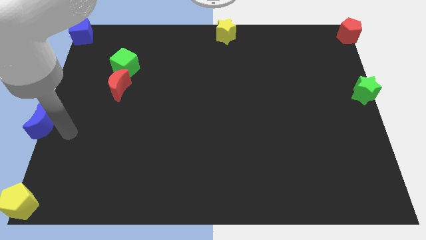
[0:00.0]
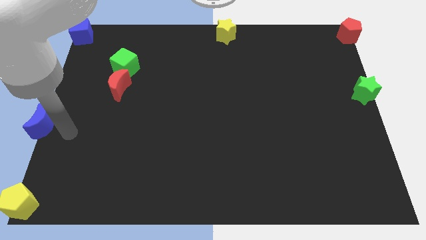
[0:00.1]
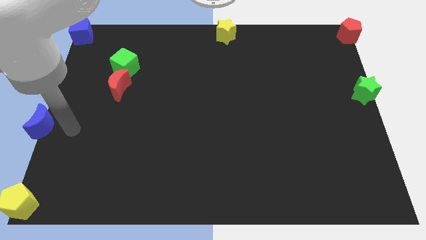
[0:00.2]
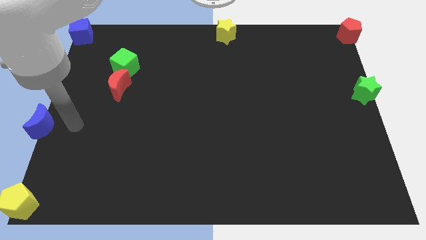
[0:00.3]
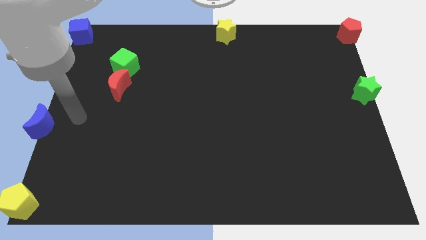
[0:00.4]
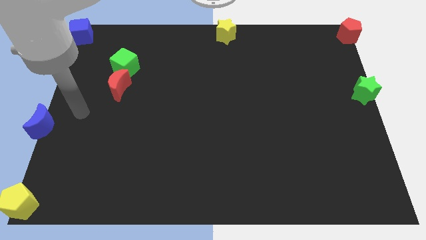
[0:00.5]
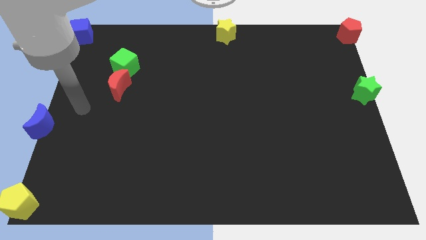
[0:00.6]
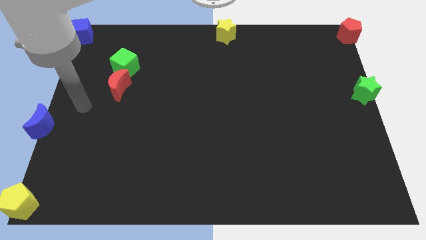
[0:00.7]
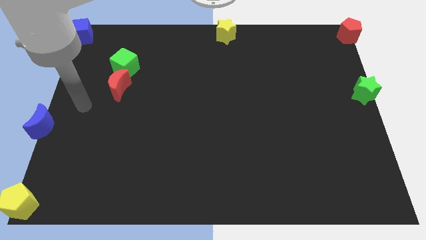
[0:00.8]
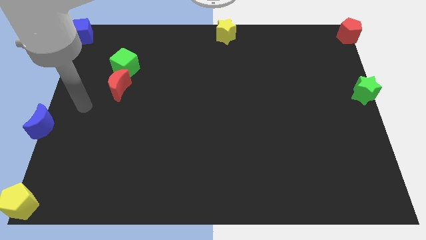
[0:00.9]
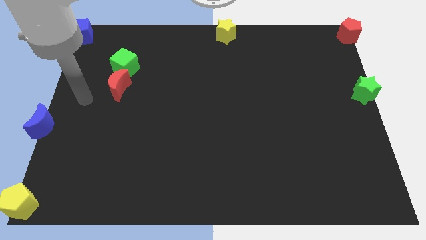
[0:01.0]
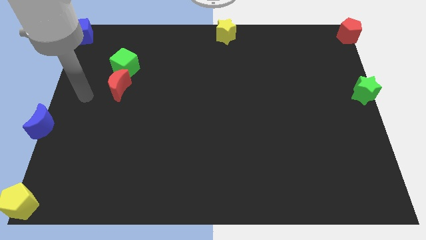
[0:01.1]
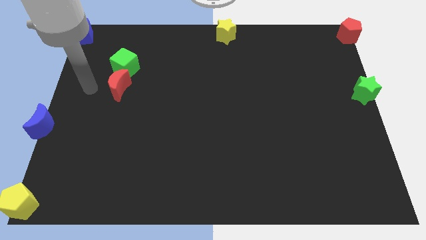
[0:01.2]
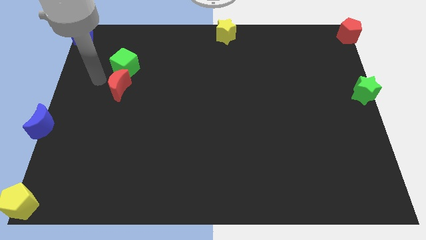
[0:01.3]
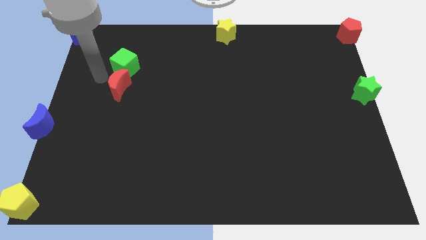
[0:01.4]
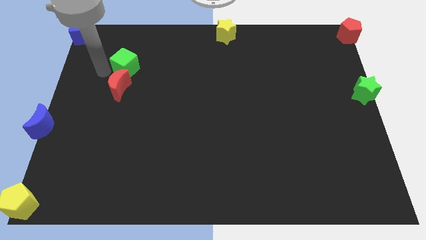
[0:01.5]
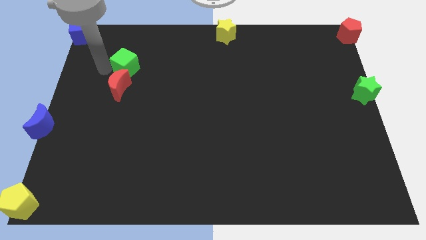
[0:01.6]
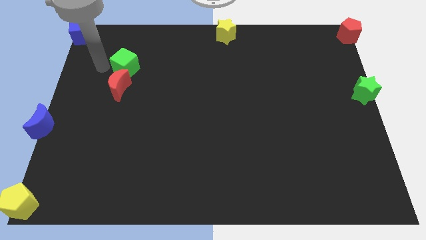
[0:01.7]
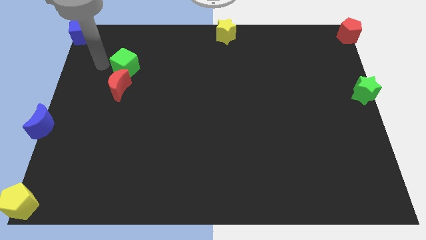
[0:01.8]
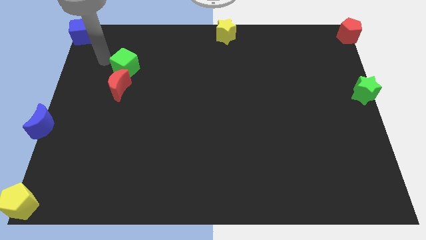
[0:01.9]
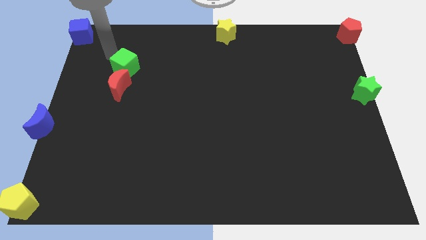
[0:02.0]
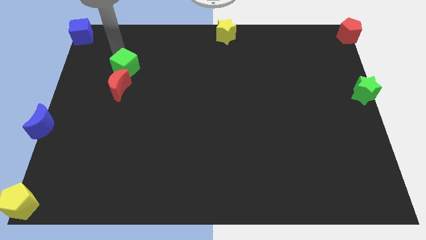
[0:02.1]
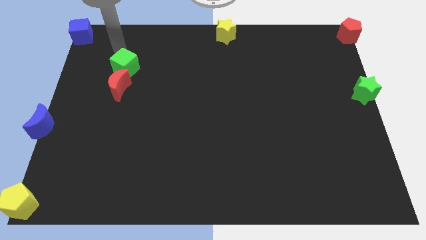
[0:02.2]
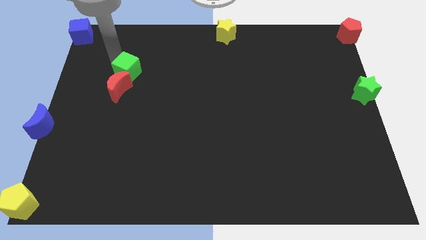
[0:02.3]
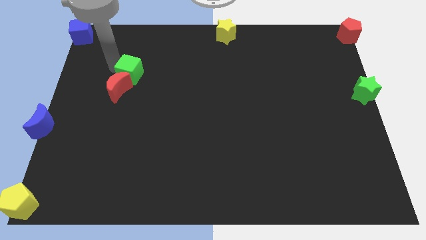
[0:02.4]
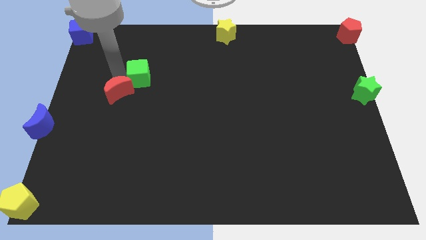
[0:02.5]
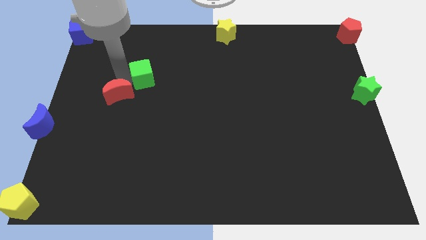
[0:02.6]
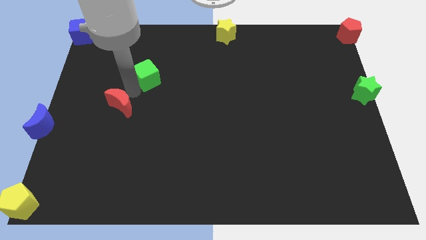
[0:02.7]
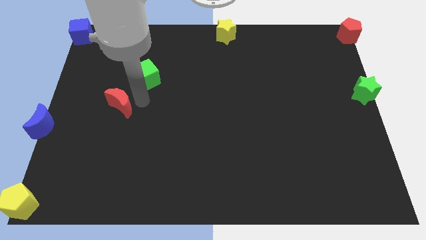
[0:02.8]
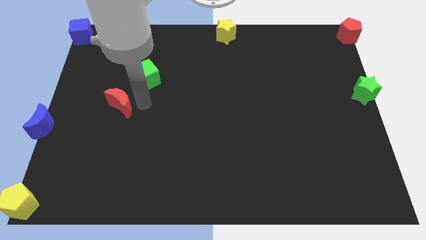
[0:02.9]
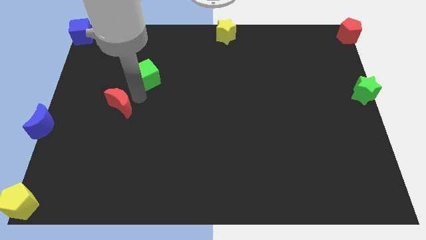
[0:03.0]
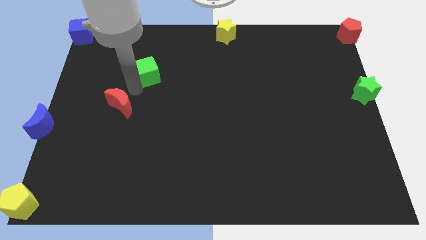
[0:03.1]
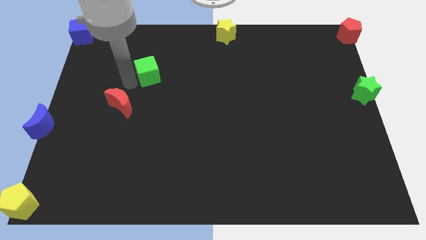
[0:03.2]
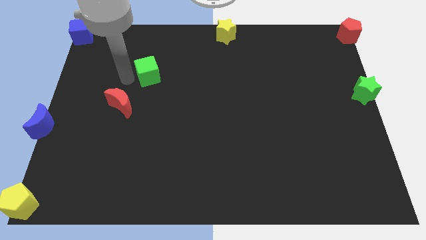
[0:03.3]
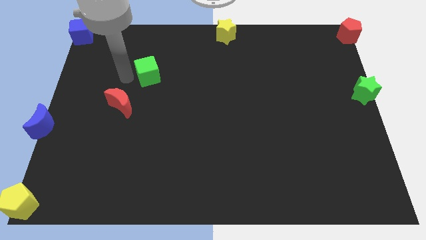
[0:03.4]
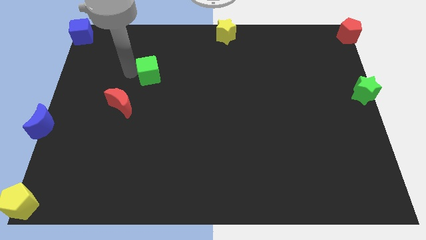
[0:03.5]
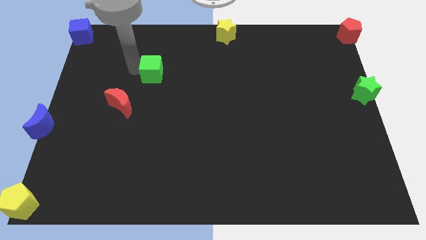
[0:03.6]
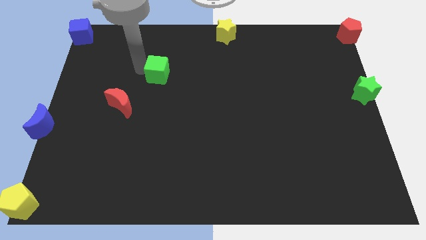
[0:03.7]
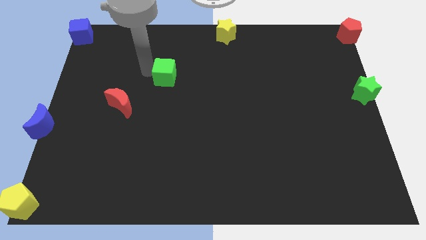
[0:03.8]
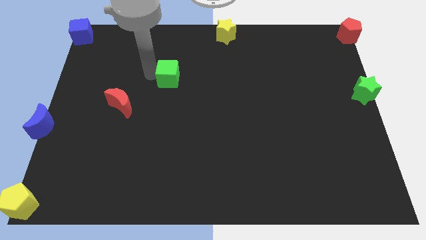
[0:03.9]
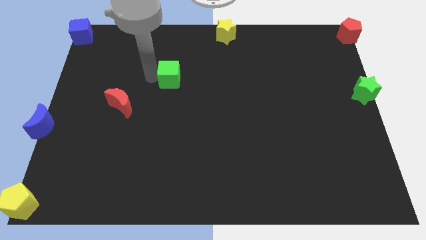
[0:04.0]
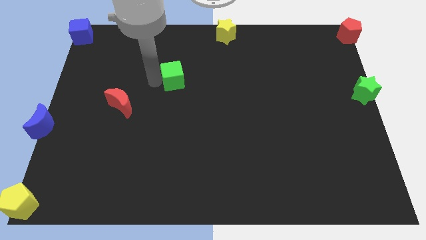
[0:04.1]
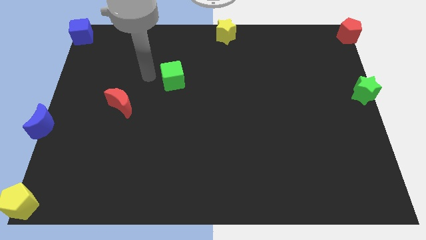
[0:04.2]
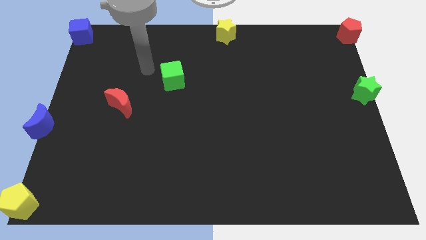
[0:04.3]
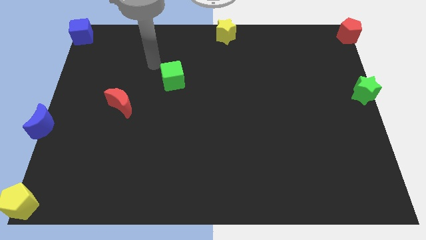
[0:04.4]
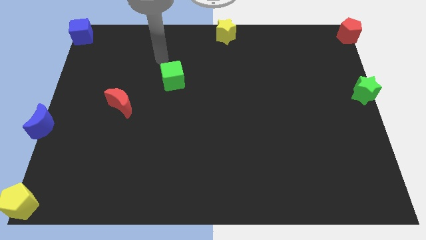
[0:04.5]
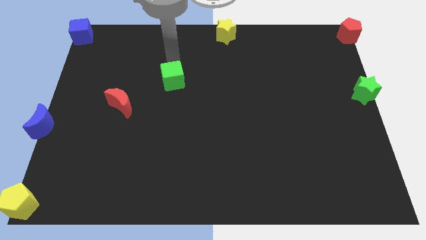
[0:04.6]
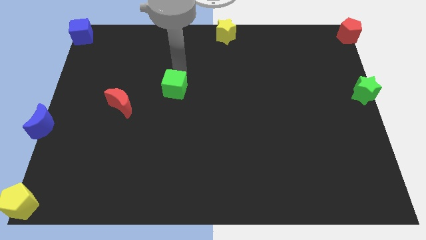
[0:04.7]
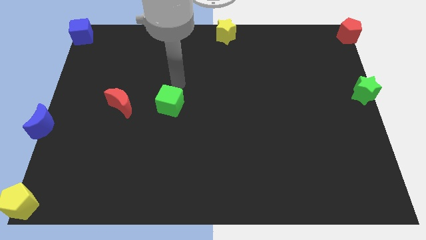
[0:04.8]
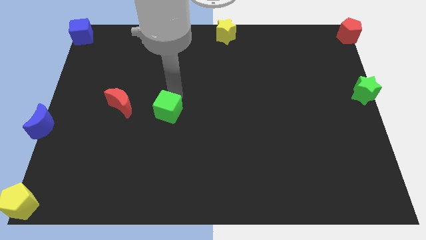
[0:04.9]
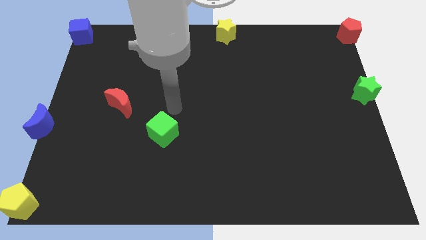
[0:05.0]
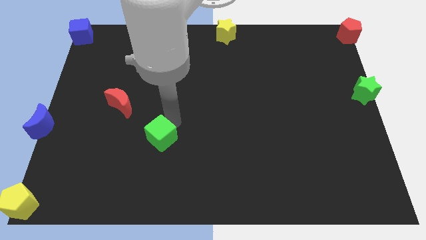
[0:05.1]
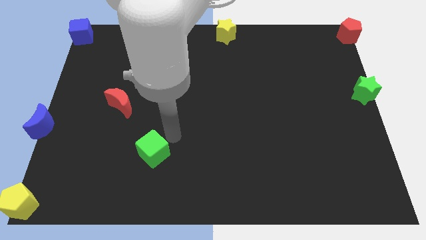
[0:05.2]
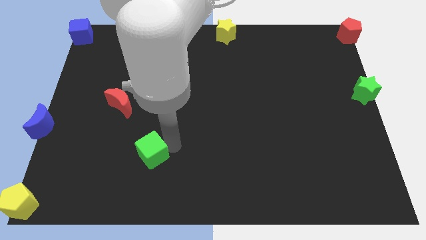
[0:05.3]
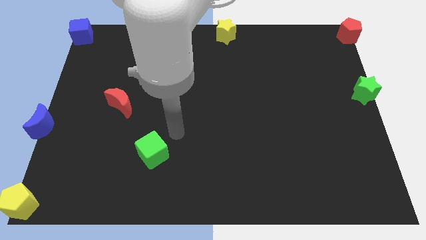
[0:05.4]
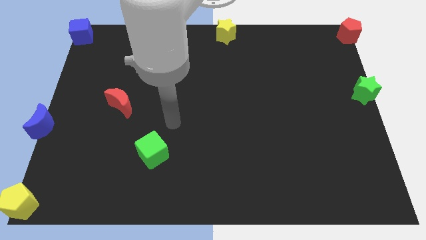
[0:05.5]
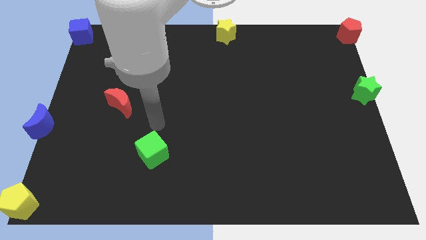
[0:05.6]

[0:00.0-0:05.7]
separate green cube and the red crescent

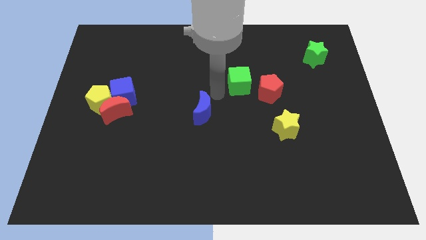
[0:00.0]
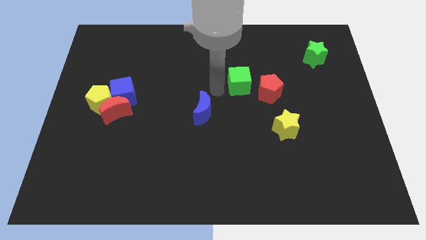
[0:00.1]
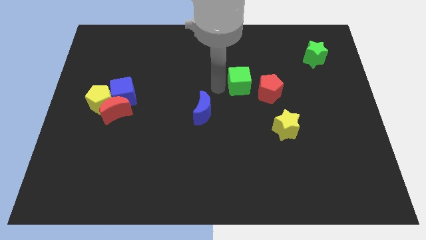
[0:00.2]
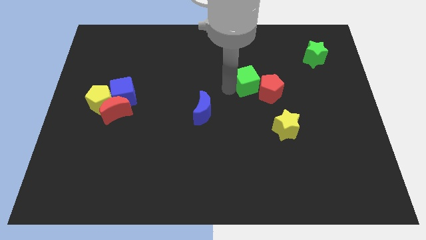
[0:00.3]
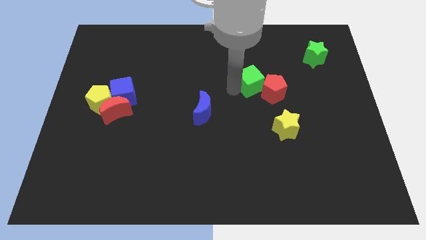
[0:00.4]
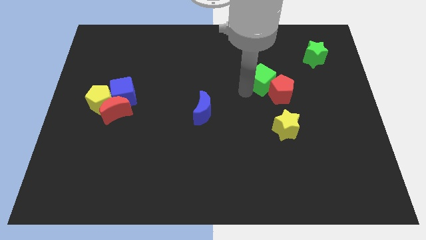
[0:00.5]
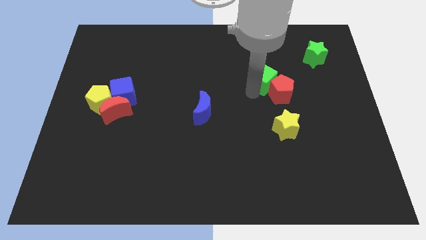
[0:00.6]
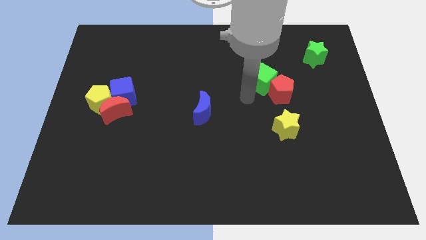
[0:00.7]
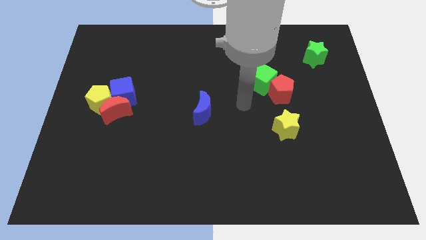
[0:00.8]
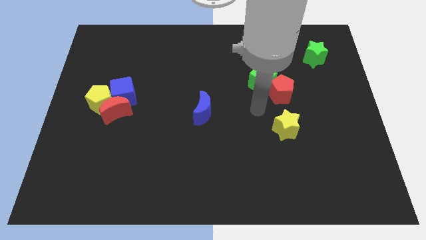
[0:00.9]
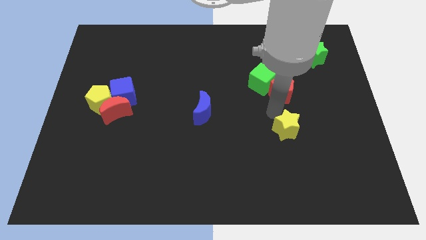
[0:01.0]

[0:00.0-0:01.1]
push the green cube into the red pentagon

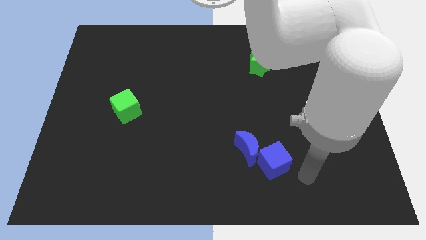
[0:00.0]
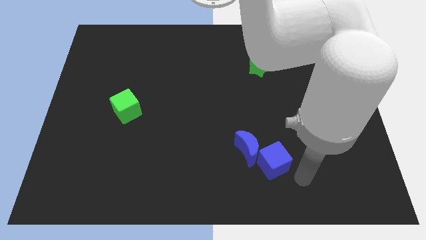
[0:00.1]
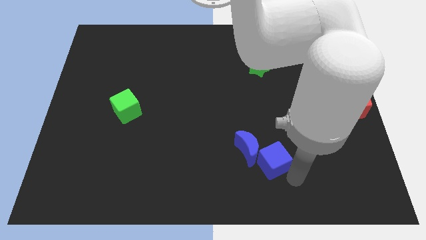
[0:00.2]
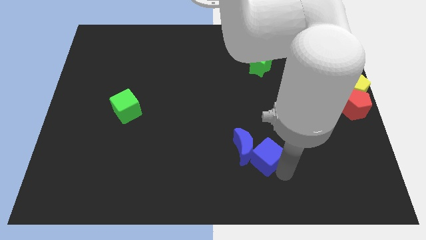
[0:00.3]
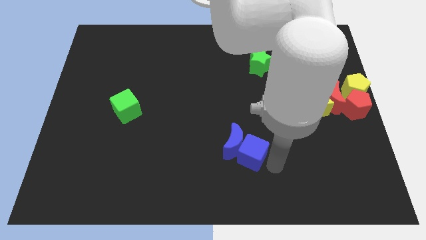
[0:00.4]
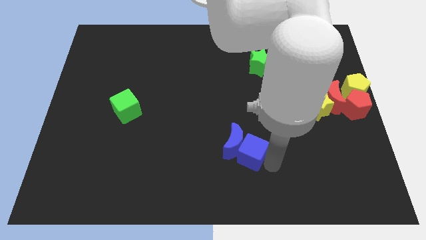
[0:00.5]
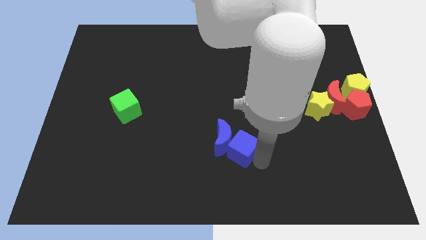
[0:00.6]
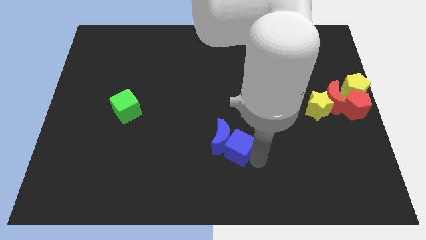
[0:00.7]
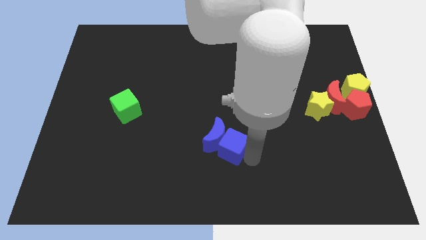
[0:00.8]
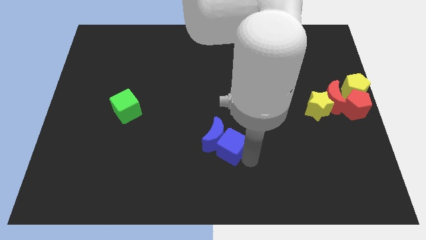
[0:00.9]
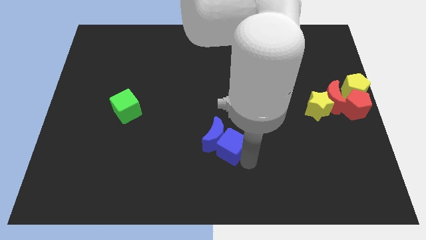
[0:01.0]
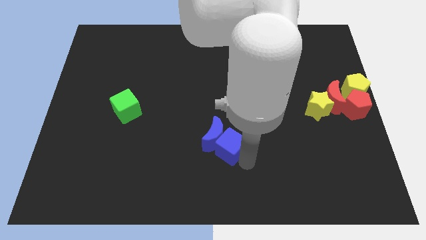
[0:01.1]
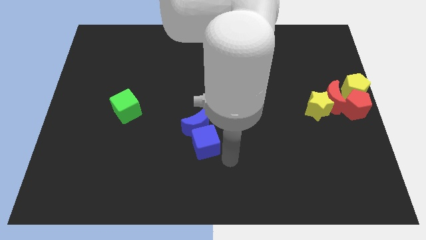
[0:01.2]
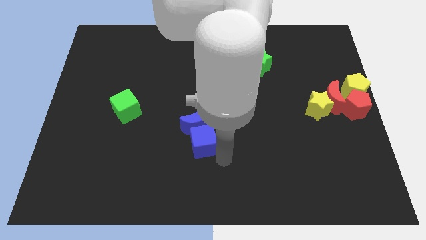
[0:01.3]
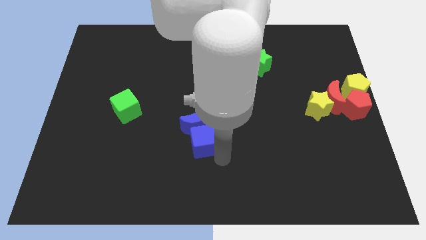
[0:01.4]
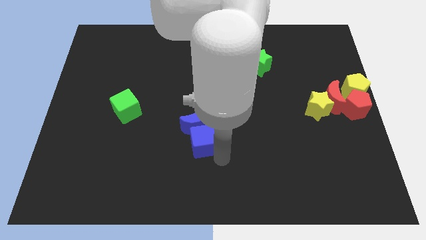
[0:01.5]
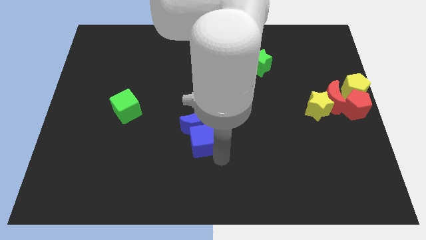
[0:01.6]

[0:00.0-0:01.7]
push the blue crescent and blue cube towards left and up a bit

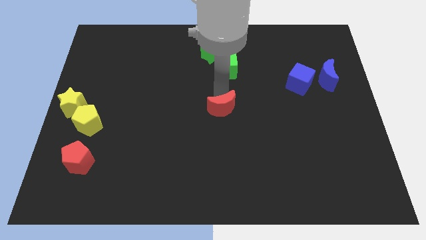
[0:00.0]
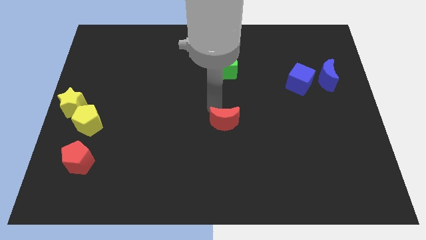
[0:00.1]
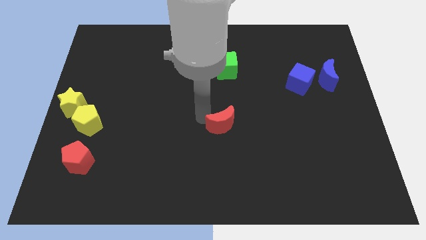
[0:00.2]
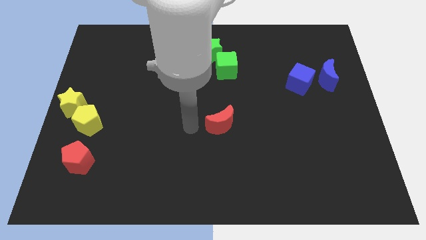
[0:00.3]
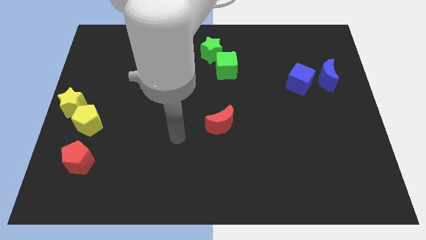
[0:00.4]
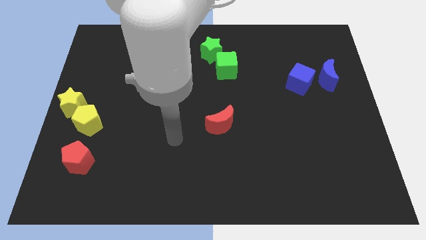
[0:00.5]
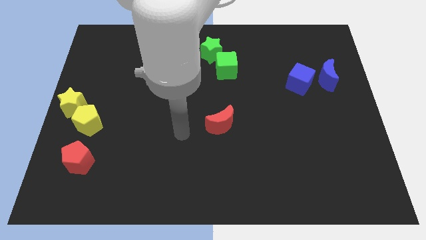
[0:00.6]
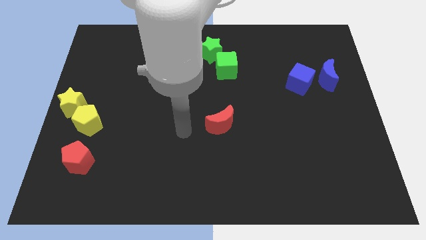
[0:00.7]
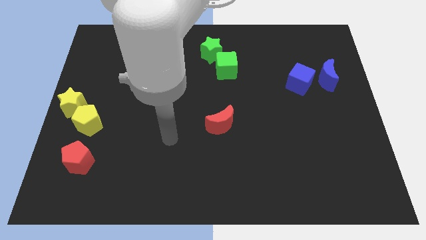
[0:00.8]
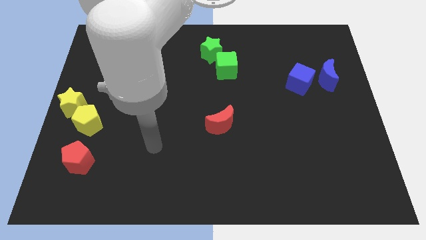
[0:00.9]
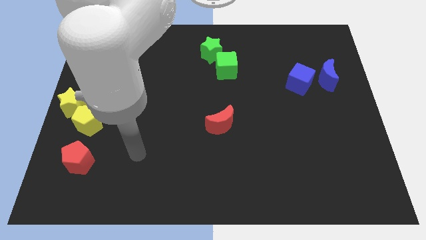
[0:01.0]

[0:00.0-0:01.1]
move red crescent slightly downwards
